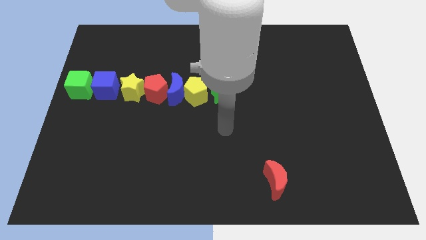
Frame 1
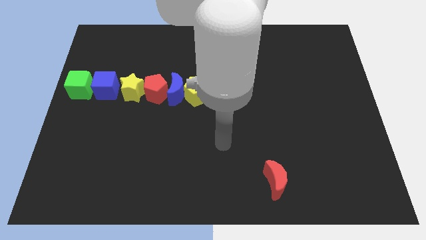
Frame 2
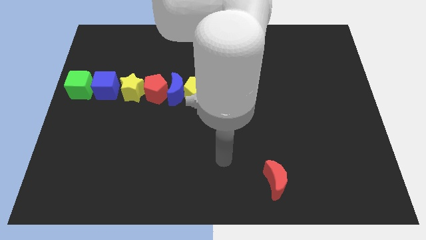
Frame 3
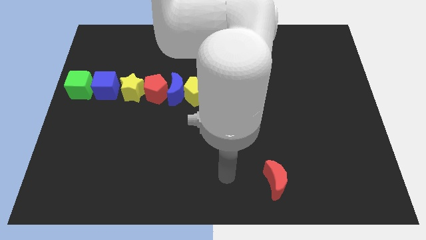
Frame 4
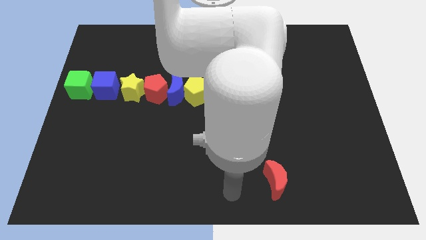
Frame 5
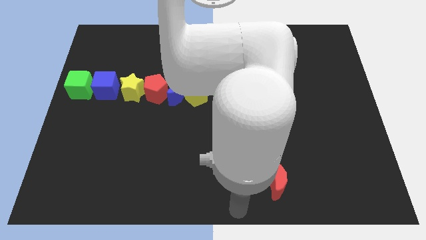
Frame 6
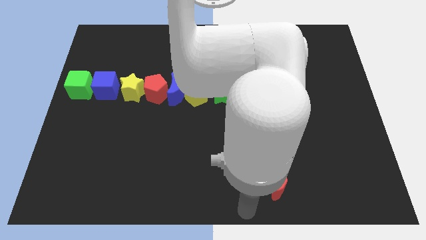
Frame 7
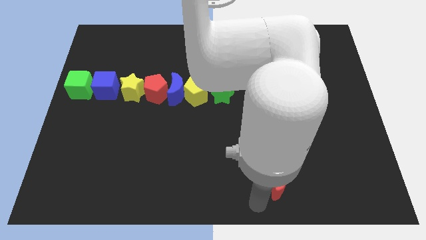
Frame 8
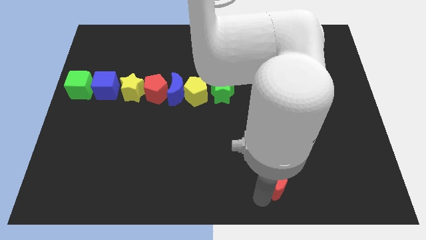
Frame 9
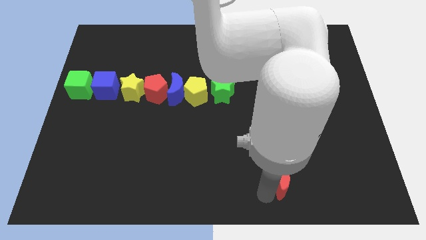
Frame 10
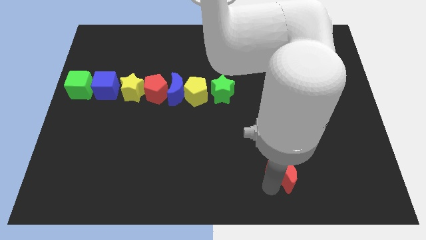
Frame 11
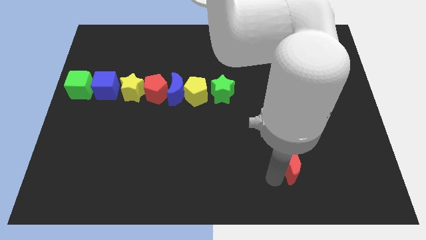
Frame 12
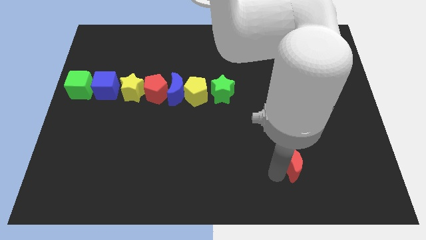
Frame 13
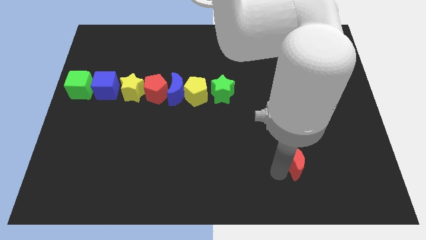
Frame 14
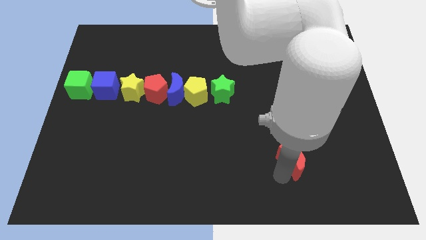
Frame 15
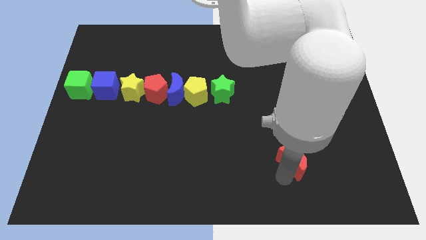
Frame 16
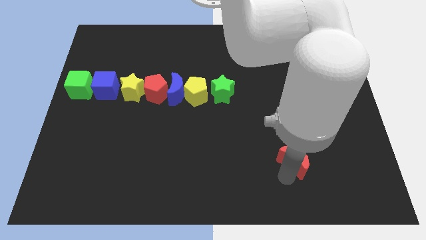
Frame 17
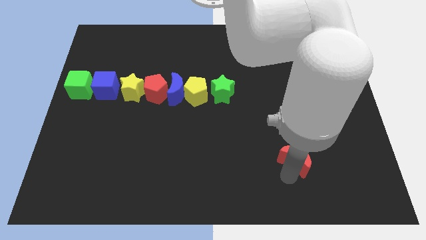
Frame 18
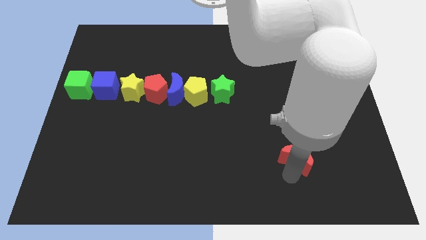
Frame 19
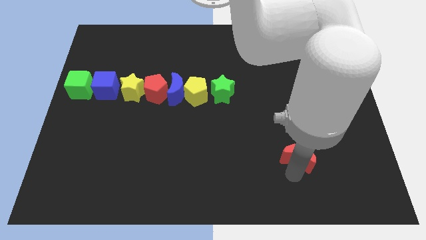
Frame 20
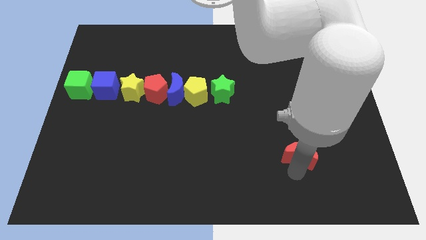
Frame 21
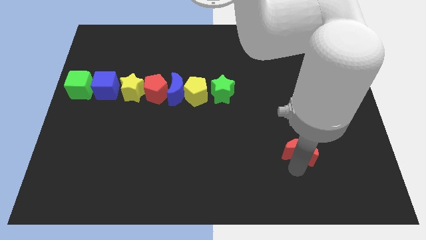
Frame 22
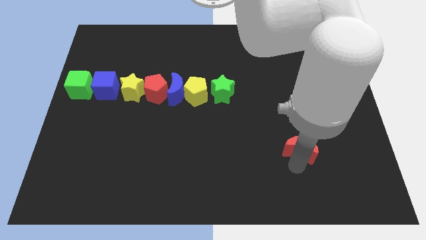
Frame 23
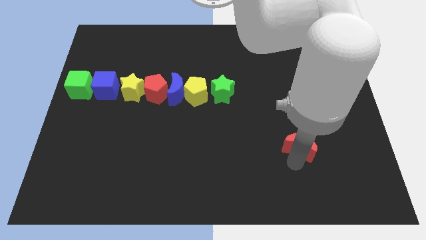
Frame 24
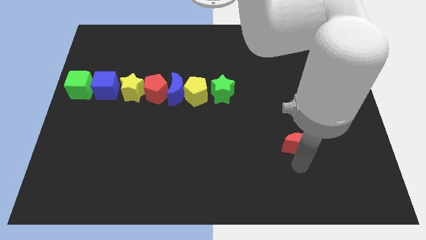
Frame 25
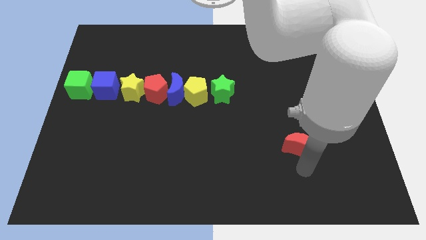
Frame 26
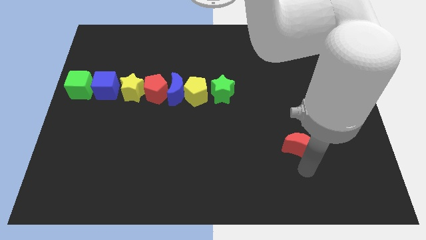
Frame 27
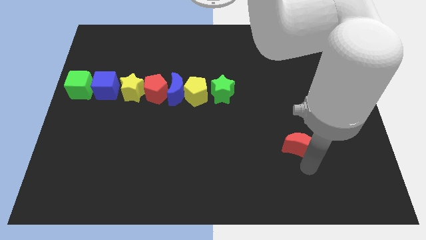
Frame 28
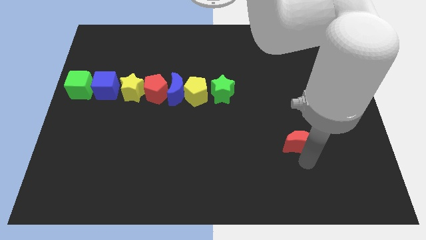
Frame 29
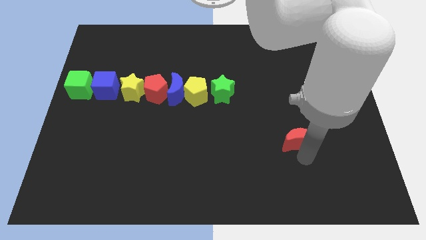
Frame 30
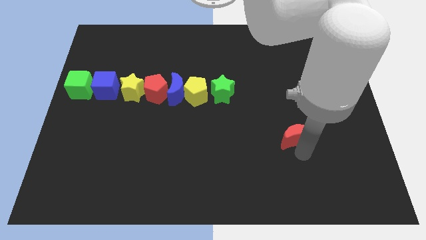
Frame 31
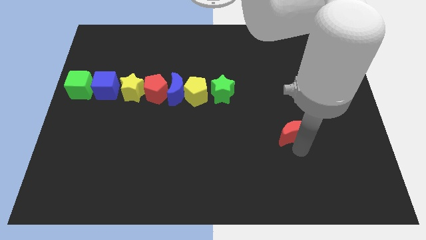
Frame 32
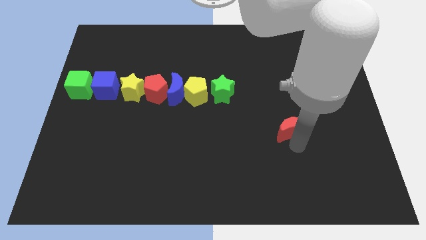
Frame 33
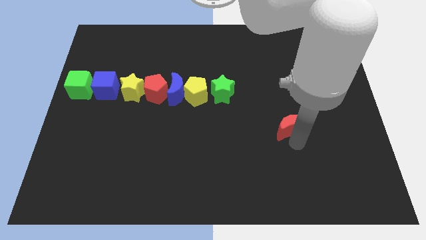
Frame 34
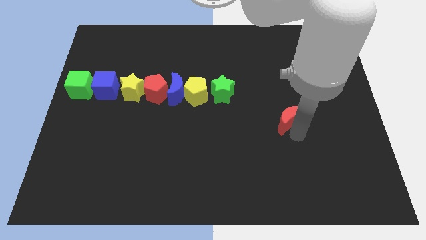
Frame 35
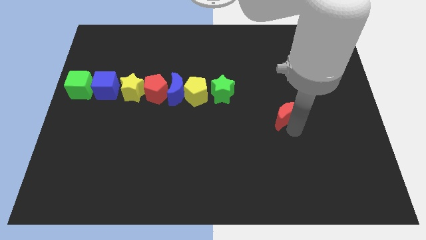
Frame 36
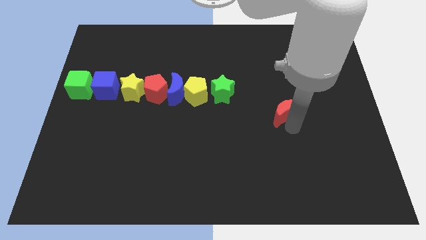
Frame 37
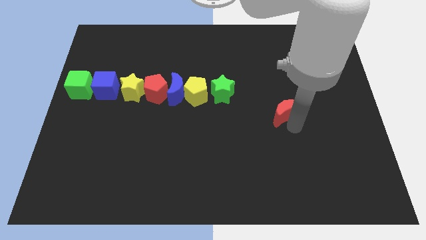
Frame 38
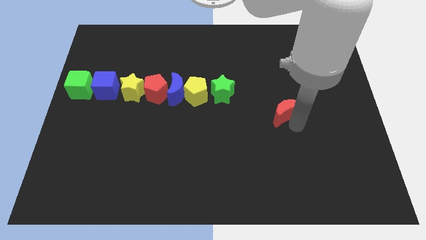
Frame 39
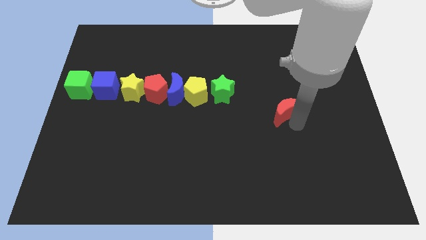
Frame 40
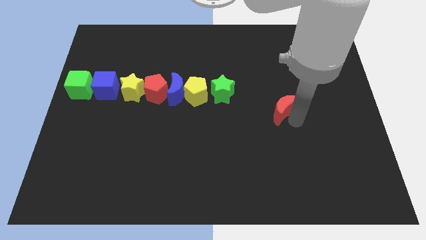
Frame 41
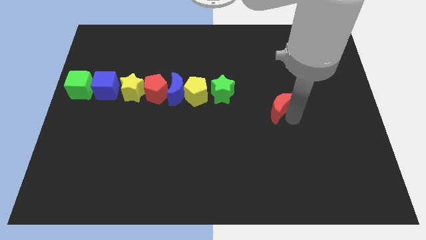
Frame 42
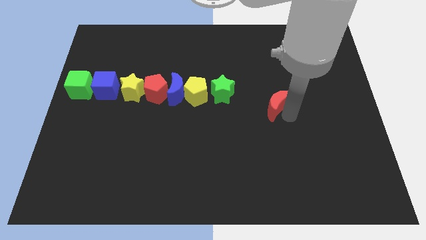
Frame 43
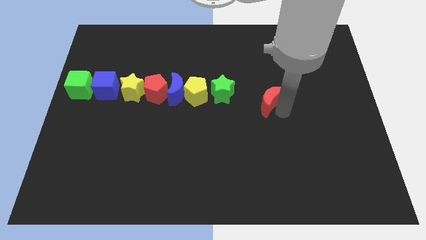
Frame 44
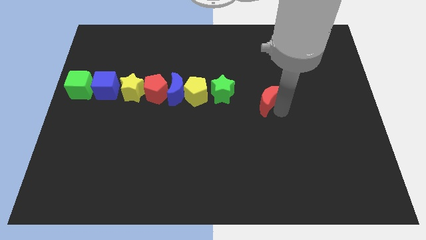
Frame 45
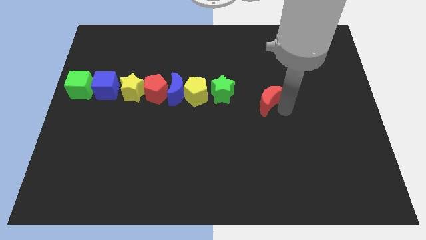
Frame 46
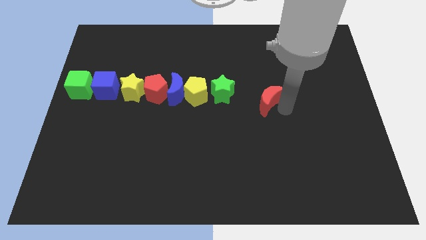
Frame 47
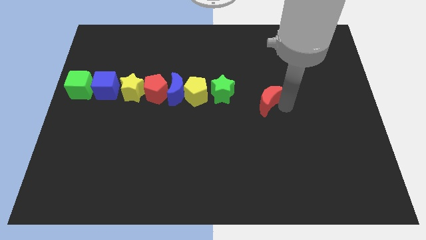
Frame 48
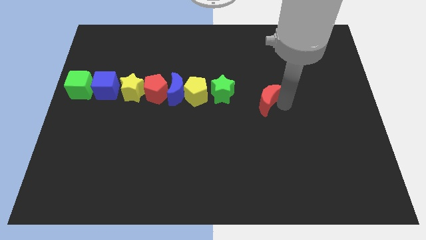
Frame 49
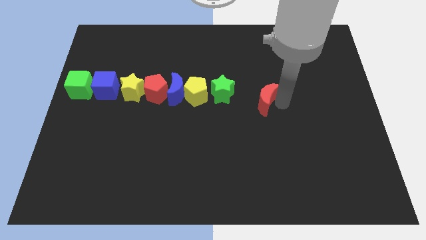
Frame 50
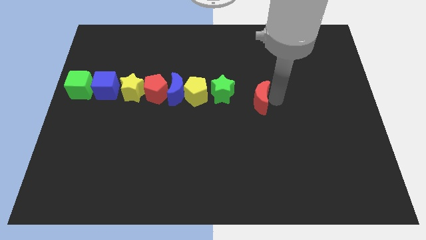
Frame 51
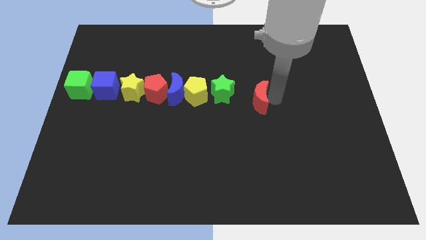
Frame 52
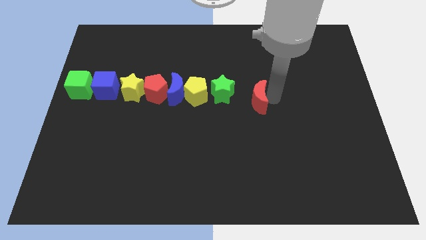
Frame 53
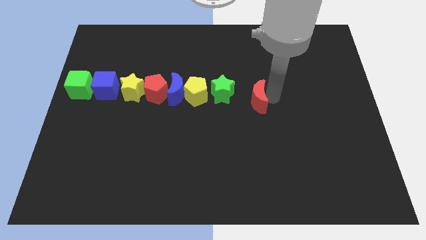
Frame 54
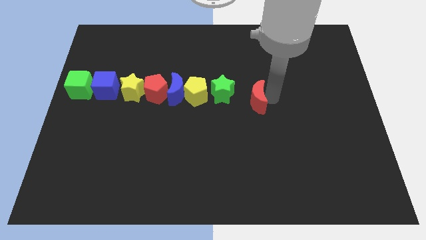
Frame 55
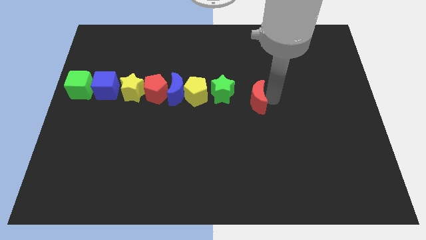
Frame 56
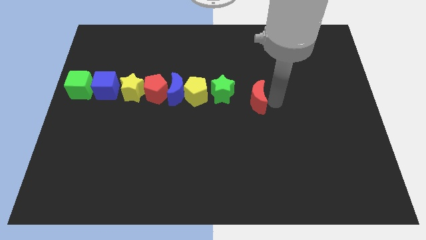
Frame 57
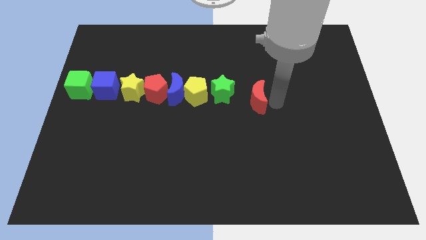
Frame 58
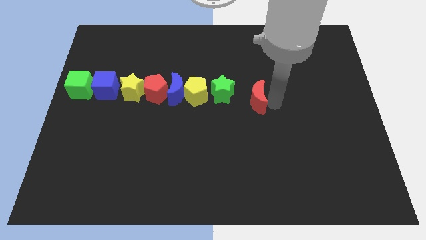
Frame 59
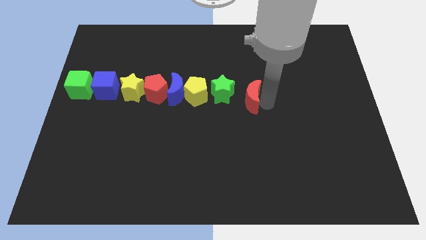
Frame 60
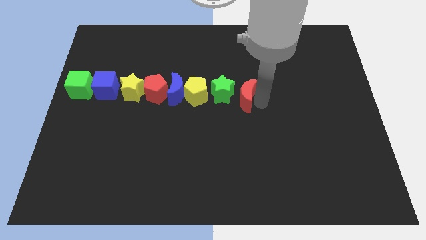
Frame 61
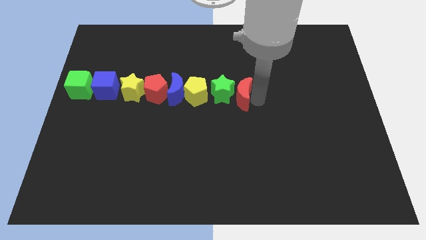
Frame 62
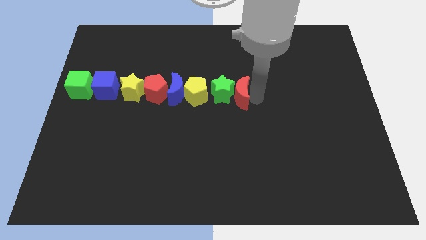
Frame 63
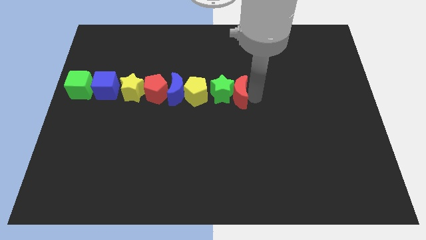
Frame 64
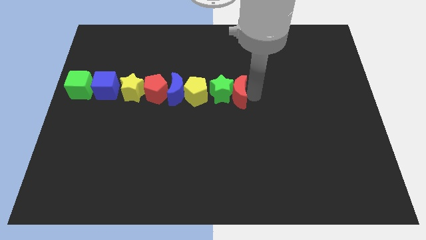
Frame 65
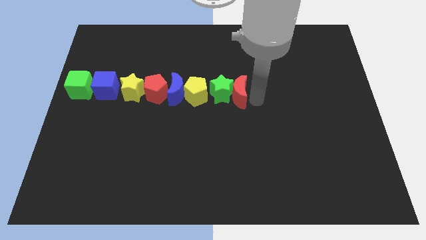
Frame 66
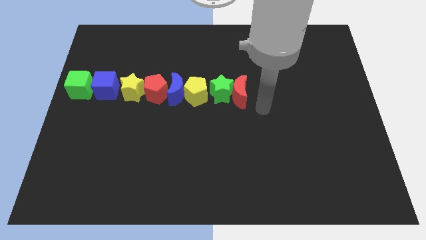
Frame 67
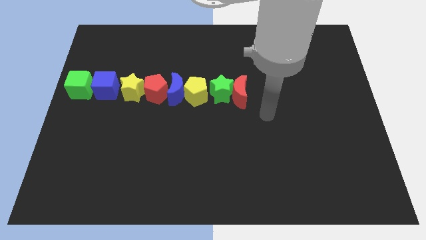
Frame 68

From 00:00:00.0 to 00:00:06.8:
push the red crescent into the green star

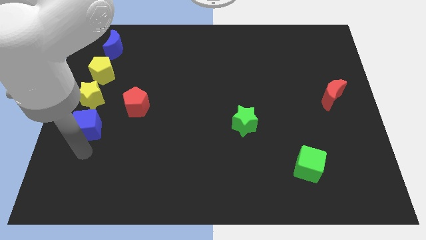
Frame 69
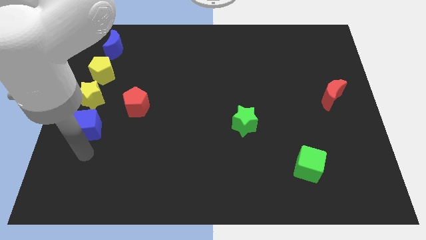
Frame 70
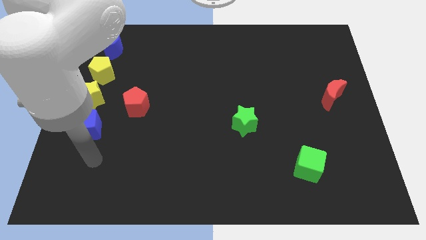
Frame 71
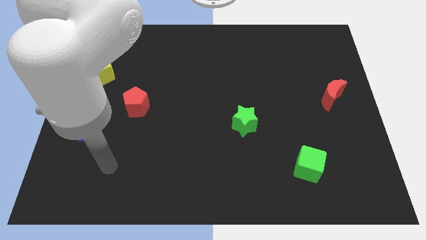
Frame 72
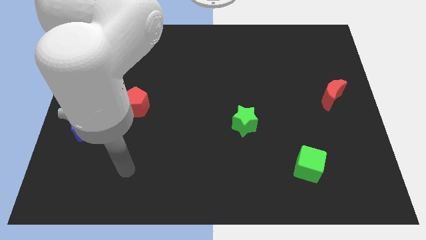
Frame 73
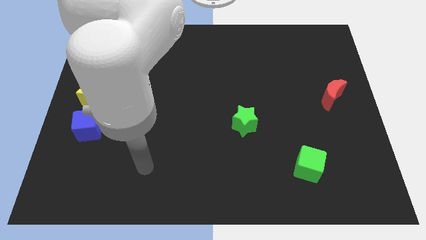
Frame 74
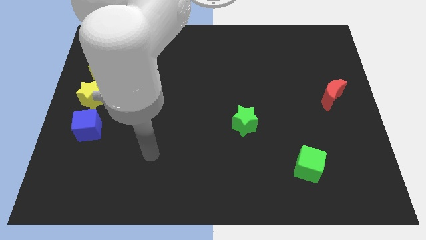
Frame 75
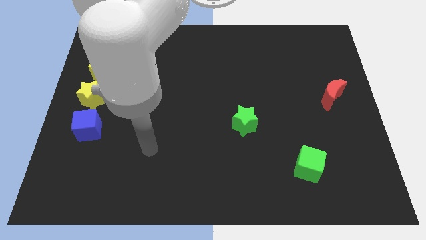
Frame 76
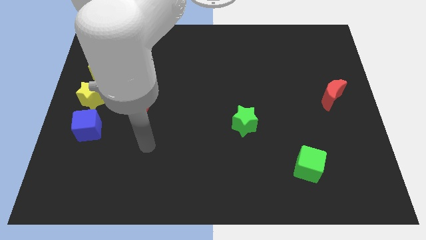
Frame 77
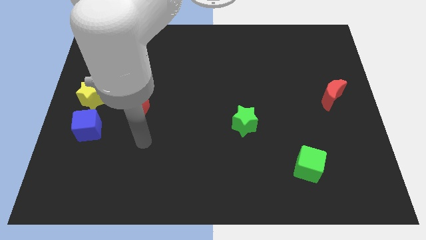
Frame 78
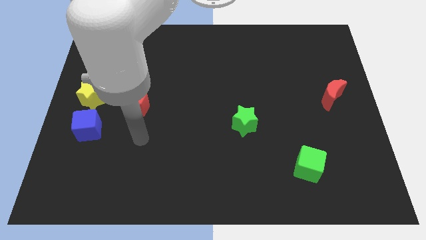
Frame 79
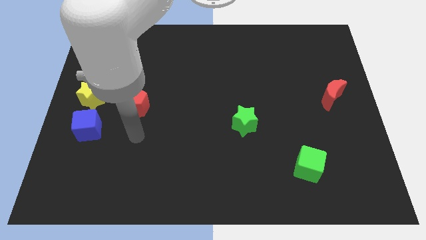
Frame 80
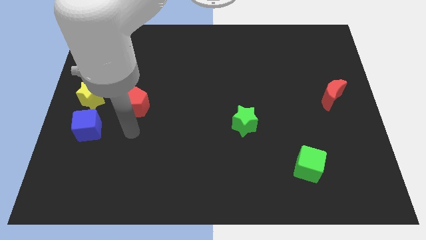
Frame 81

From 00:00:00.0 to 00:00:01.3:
point your arm at the bottom of red pentagon

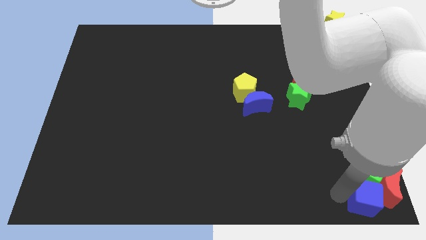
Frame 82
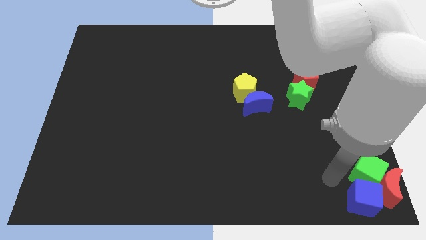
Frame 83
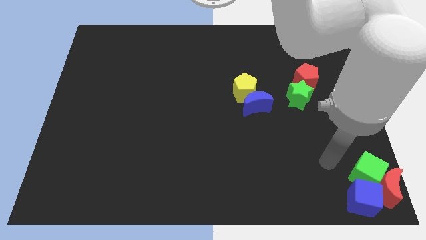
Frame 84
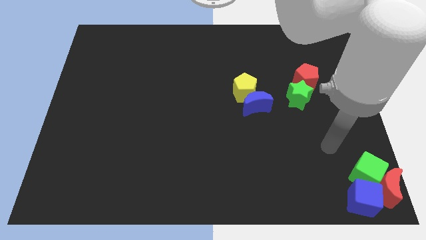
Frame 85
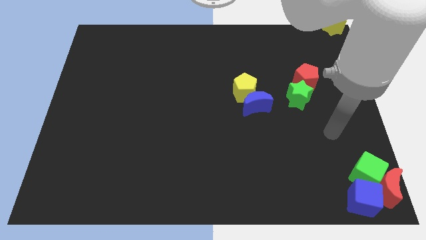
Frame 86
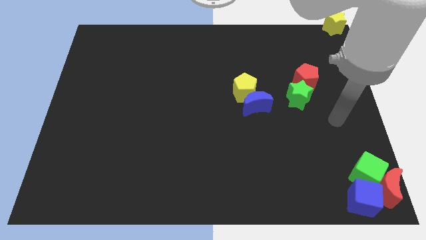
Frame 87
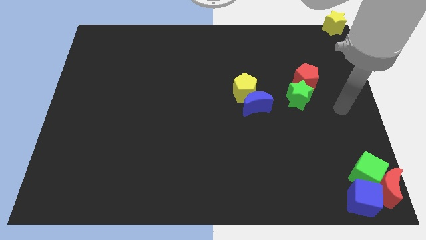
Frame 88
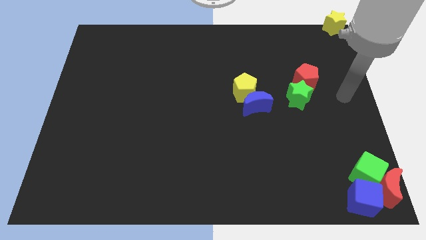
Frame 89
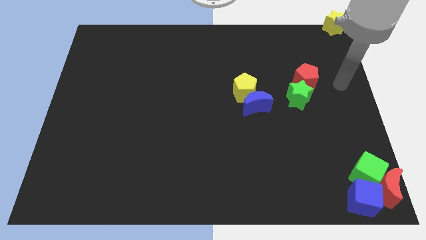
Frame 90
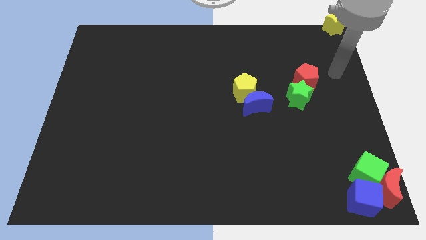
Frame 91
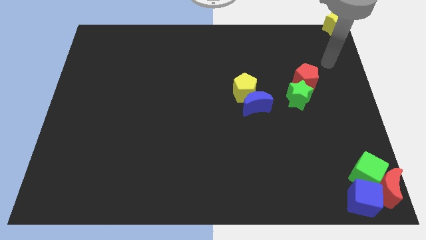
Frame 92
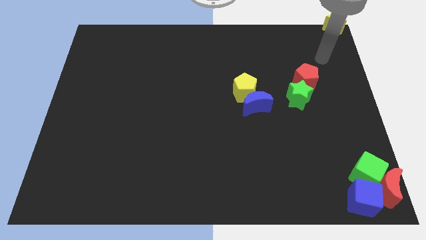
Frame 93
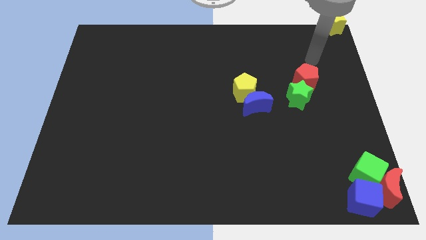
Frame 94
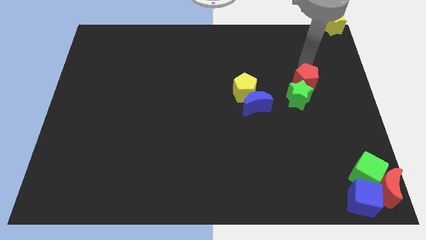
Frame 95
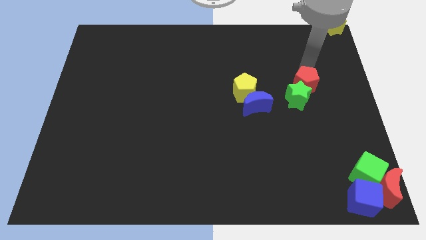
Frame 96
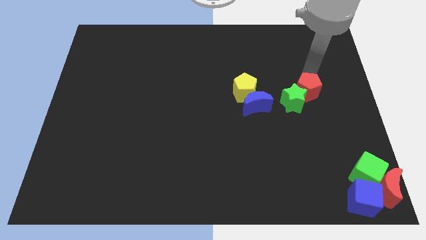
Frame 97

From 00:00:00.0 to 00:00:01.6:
slightly push the red pentagon into the green star
